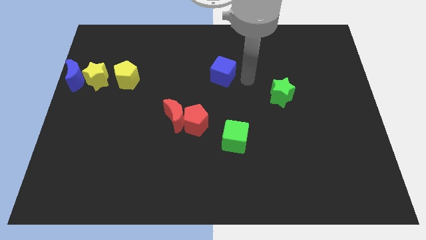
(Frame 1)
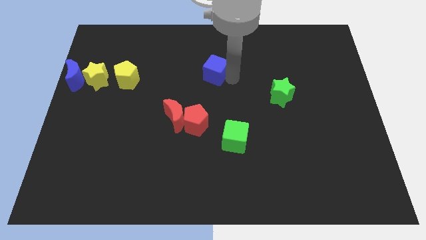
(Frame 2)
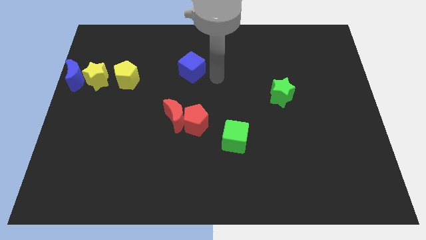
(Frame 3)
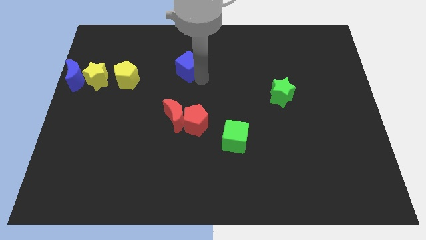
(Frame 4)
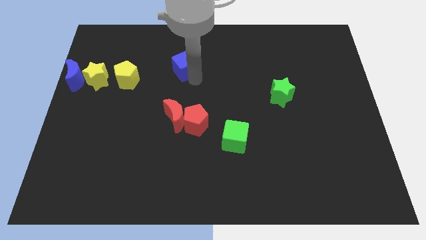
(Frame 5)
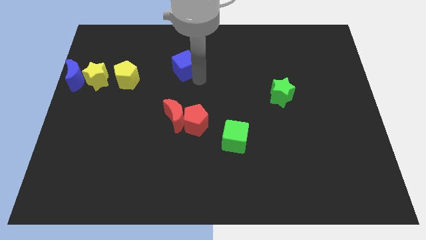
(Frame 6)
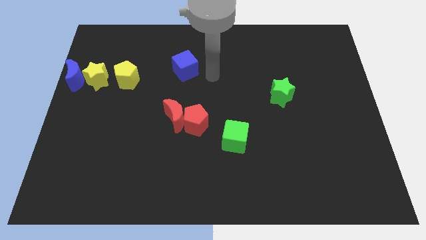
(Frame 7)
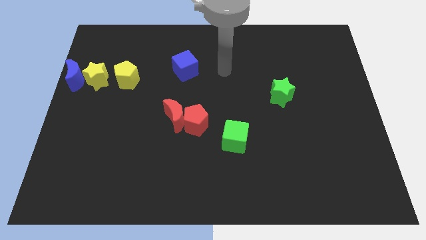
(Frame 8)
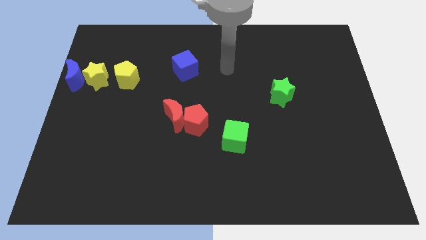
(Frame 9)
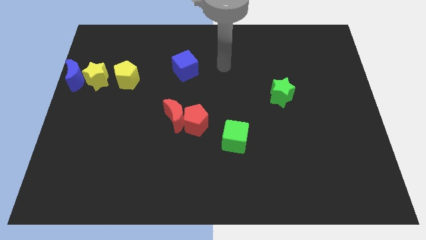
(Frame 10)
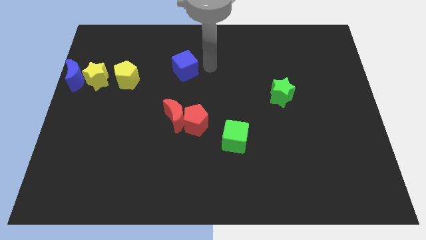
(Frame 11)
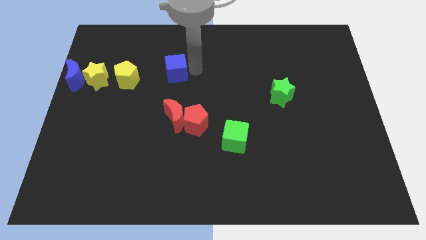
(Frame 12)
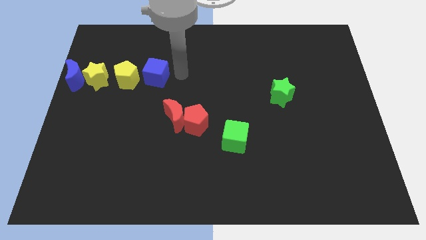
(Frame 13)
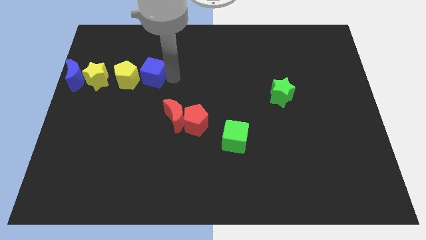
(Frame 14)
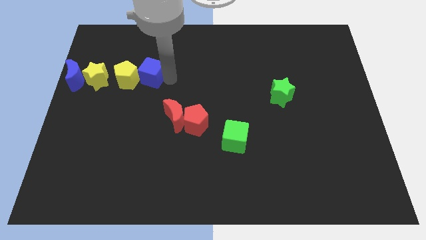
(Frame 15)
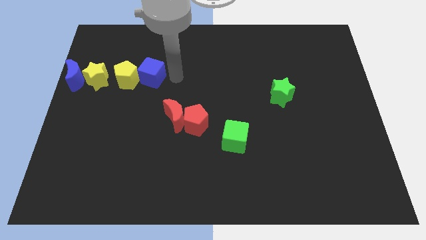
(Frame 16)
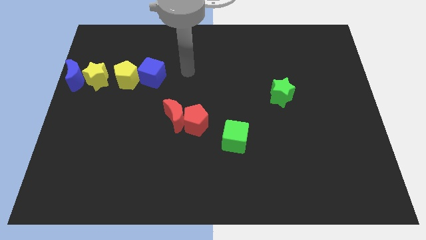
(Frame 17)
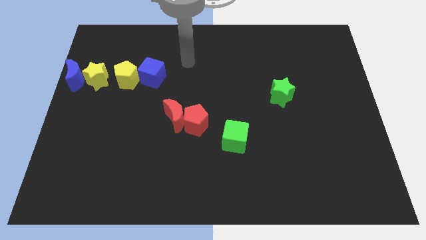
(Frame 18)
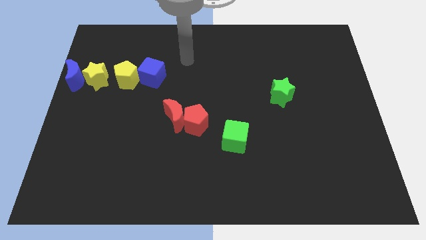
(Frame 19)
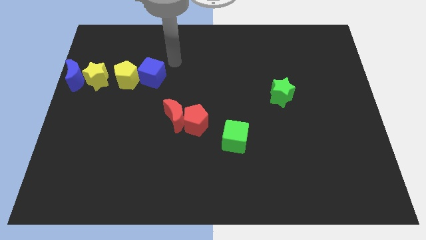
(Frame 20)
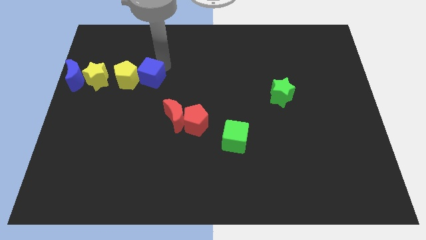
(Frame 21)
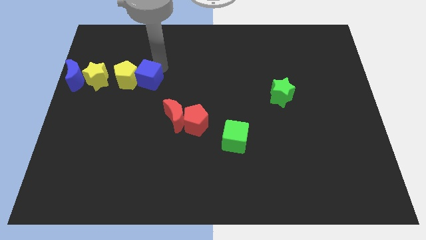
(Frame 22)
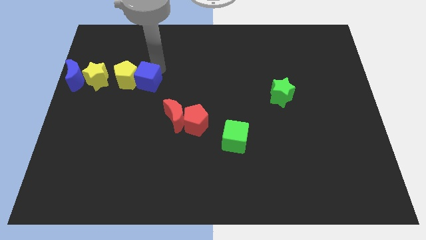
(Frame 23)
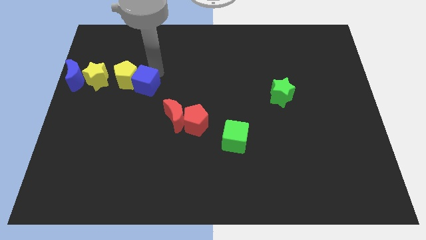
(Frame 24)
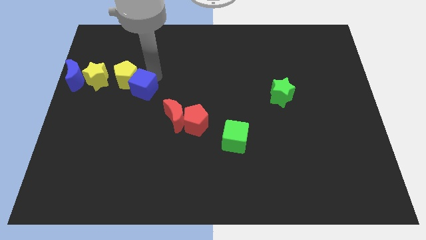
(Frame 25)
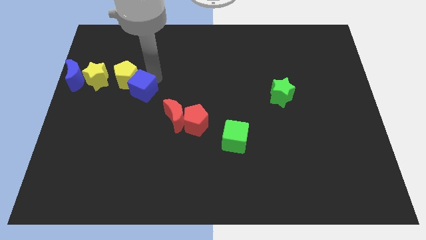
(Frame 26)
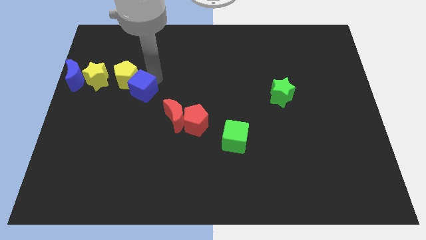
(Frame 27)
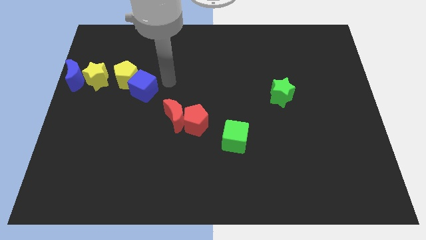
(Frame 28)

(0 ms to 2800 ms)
push the blue cube to the bottom right side of the yellow pentagon

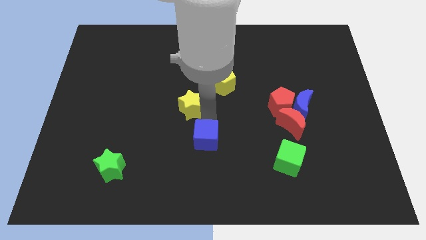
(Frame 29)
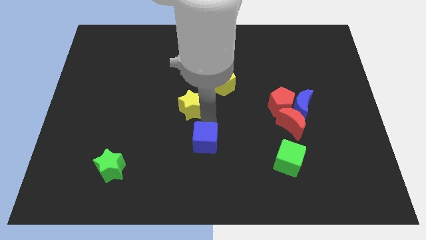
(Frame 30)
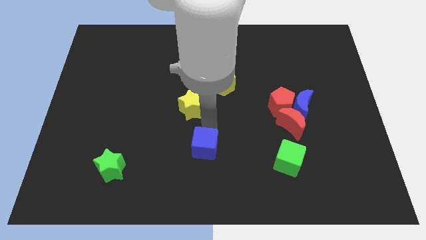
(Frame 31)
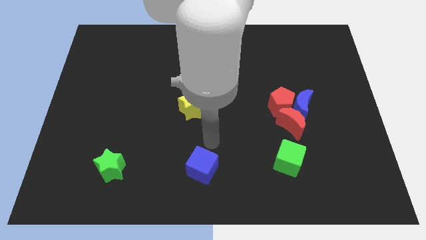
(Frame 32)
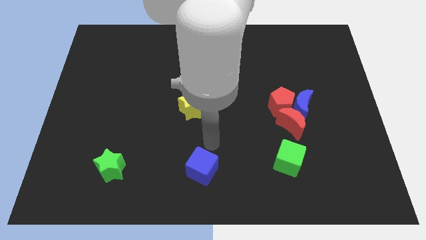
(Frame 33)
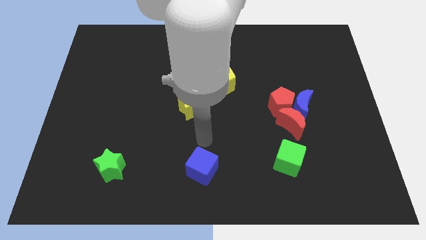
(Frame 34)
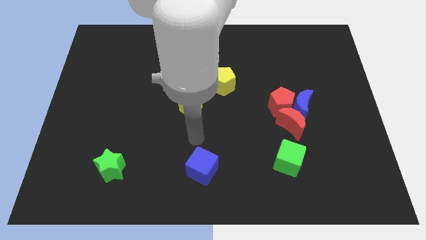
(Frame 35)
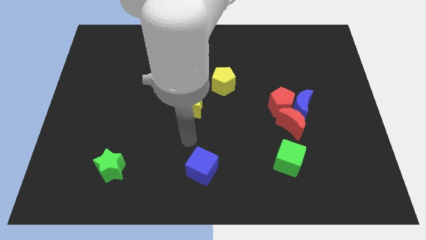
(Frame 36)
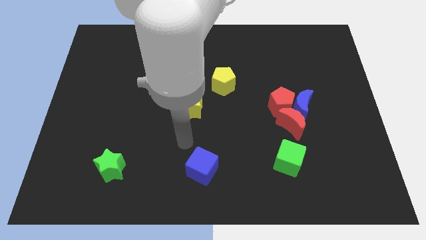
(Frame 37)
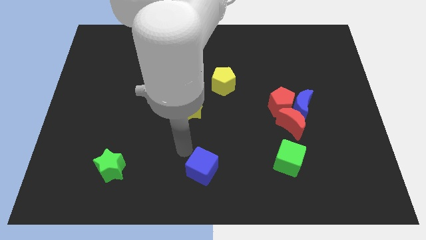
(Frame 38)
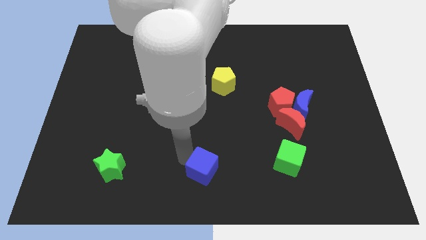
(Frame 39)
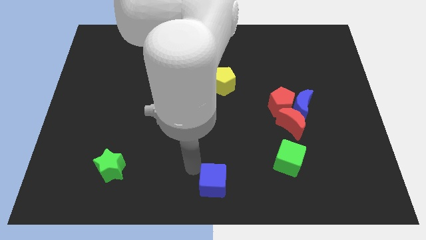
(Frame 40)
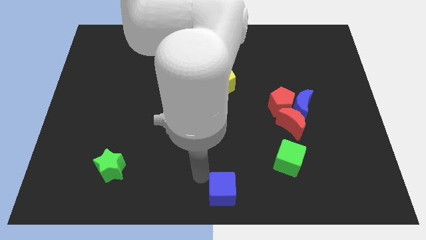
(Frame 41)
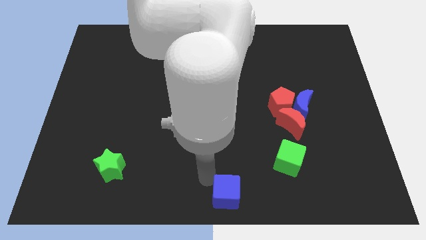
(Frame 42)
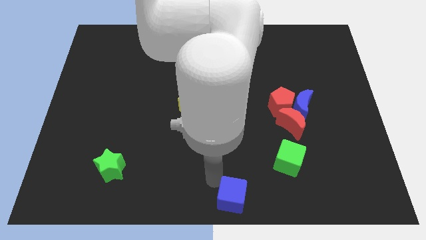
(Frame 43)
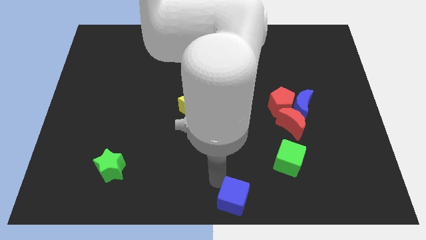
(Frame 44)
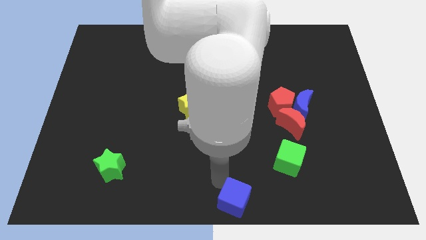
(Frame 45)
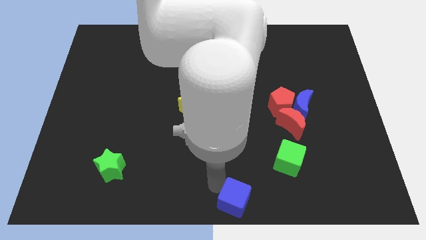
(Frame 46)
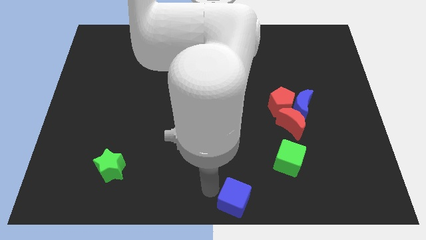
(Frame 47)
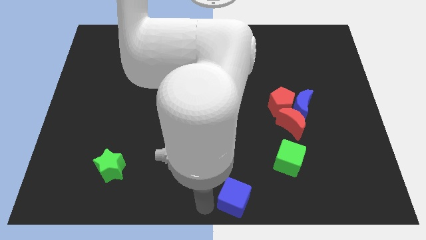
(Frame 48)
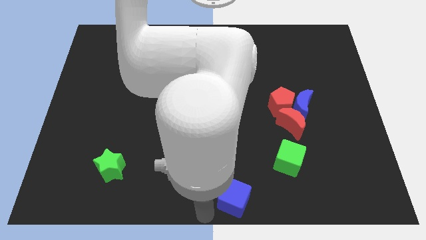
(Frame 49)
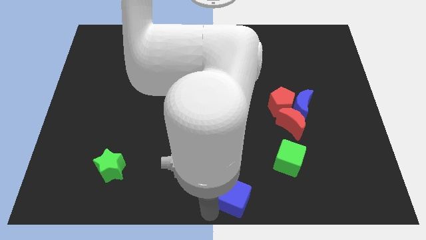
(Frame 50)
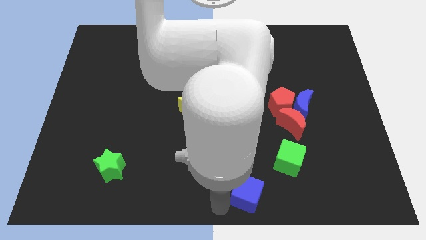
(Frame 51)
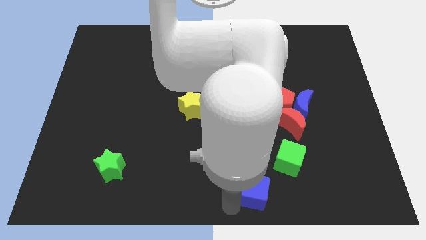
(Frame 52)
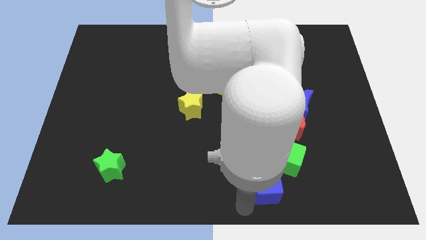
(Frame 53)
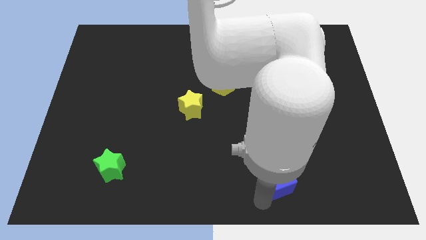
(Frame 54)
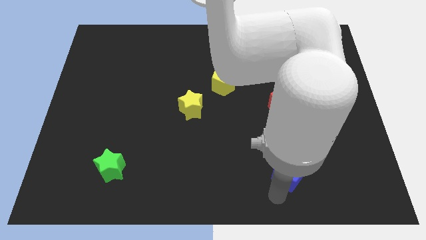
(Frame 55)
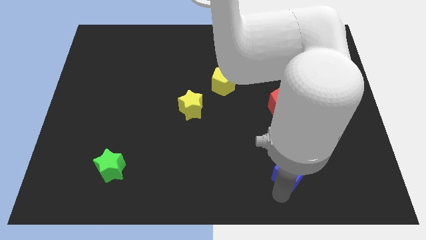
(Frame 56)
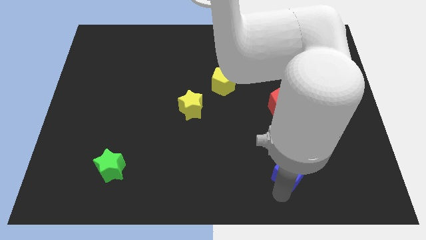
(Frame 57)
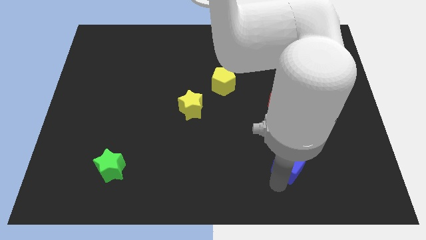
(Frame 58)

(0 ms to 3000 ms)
move the blue cube to the bottom of the green cube

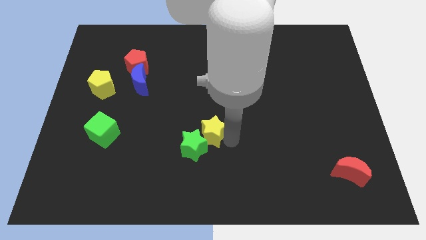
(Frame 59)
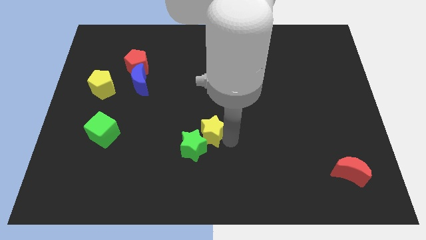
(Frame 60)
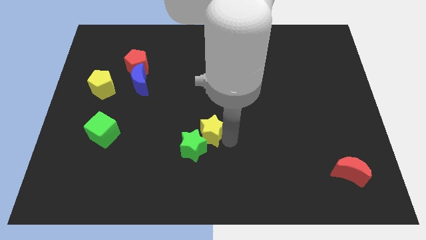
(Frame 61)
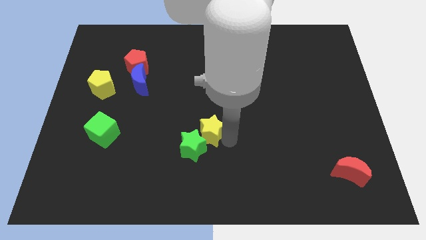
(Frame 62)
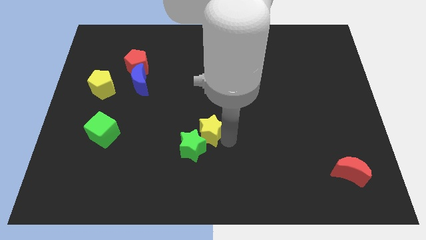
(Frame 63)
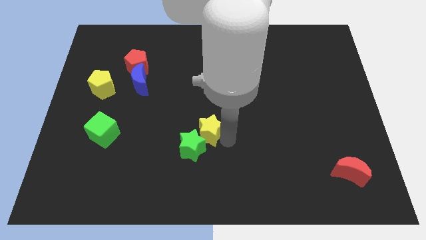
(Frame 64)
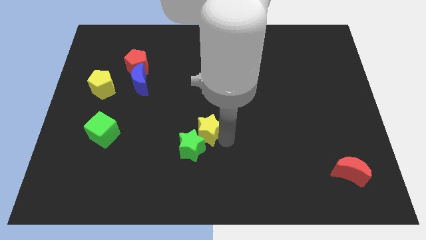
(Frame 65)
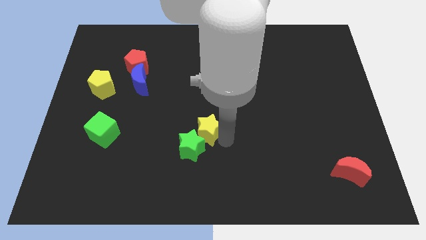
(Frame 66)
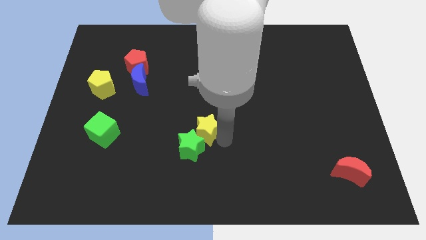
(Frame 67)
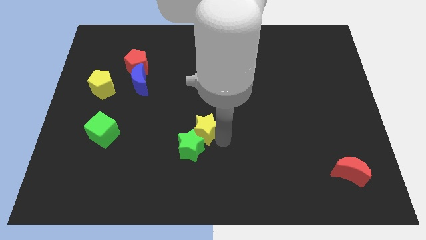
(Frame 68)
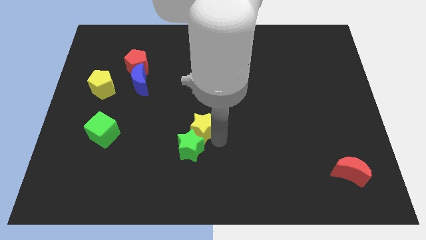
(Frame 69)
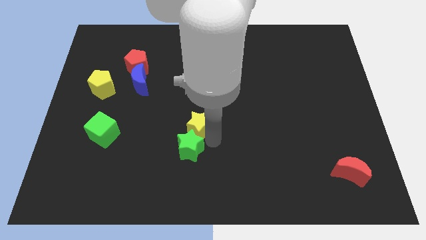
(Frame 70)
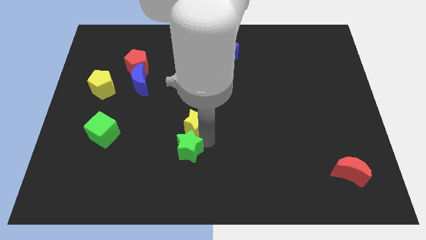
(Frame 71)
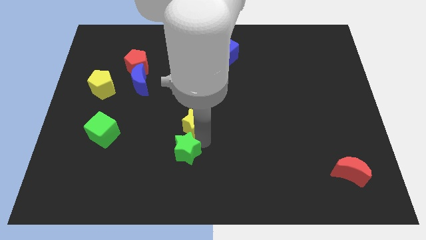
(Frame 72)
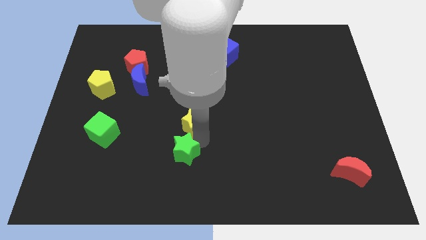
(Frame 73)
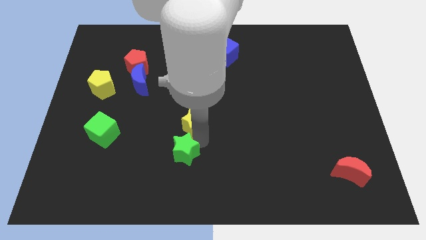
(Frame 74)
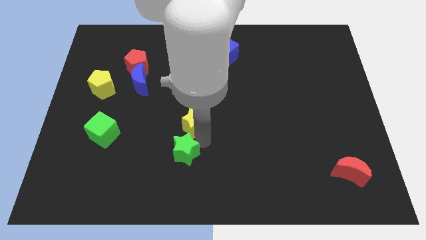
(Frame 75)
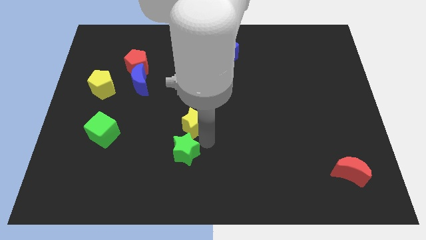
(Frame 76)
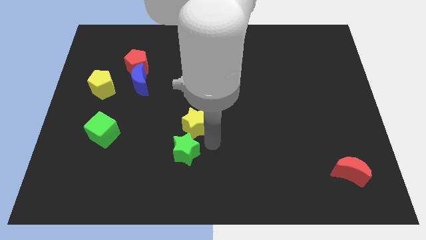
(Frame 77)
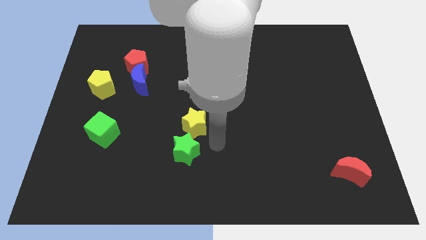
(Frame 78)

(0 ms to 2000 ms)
push the yellow star slightly left

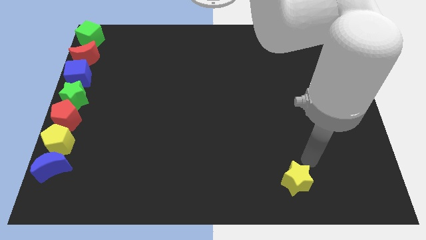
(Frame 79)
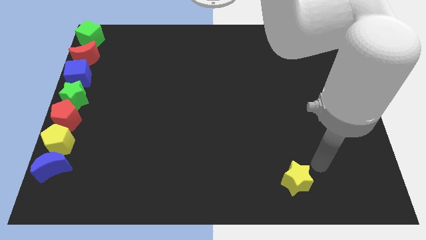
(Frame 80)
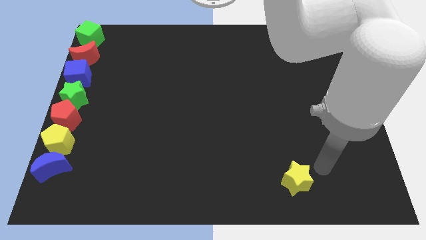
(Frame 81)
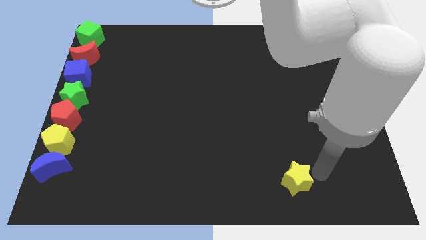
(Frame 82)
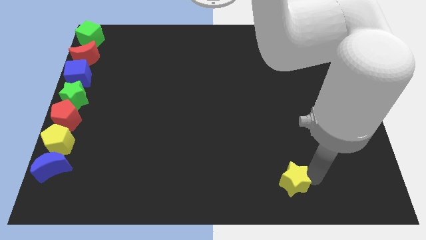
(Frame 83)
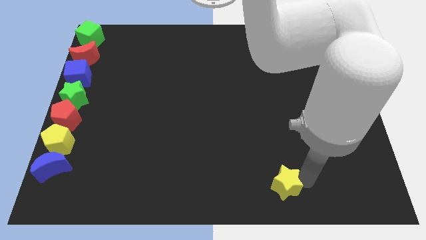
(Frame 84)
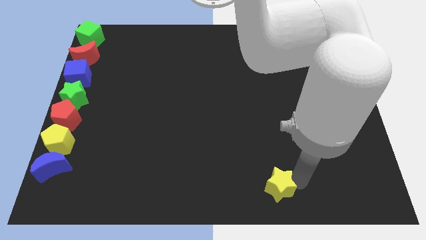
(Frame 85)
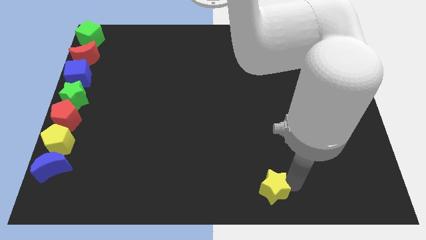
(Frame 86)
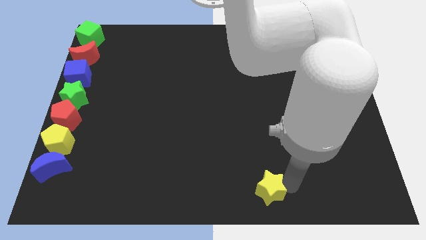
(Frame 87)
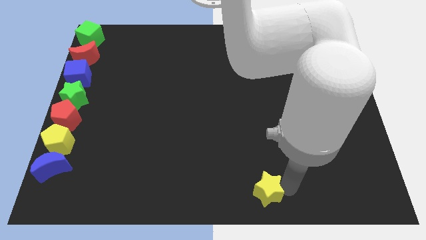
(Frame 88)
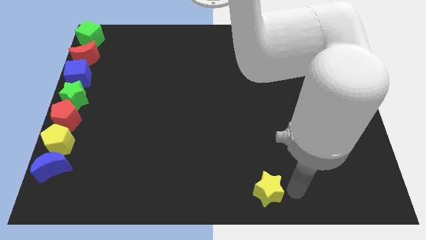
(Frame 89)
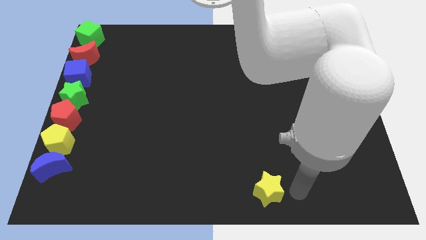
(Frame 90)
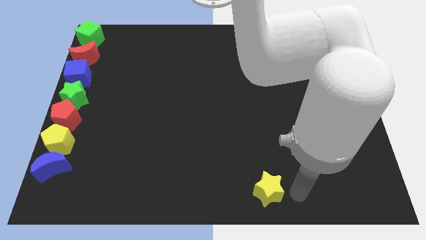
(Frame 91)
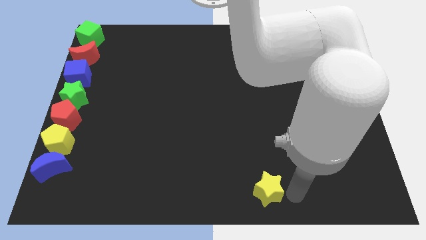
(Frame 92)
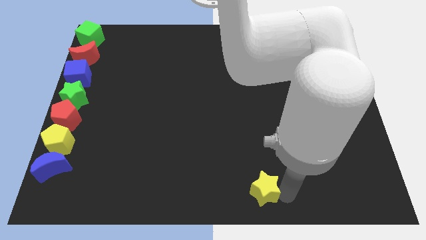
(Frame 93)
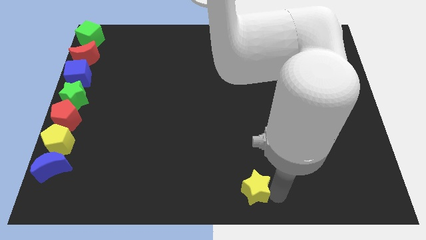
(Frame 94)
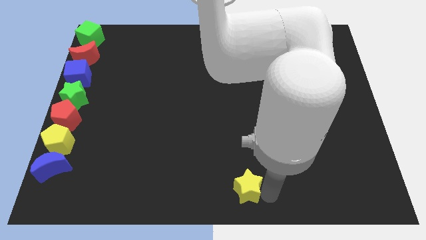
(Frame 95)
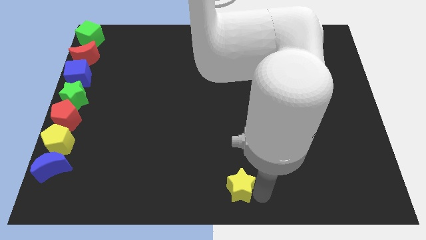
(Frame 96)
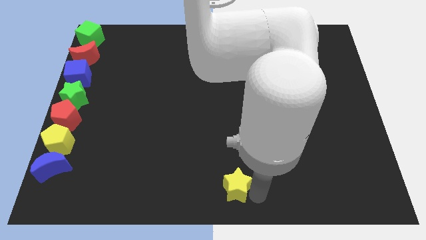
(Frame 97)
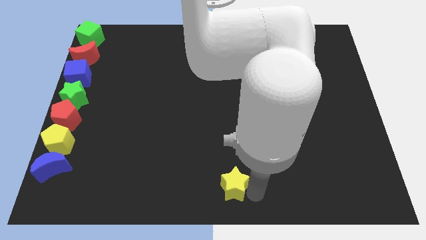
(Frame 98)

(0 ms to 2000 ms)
push the yellow star to the bottom center of the board
